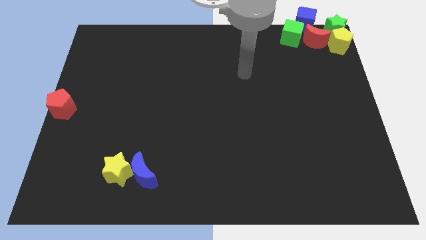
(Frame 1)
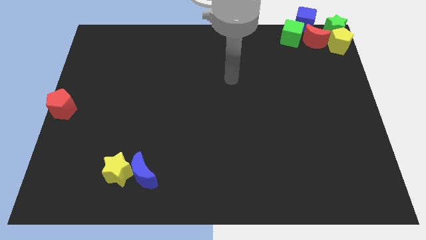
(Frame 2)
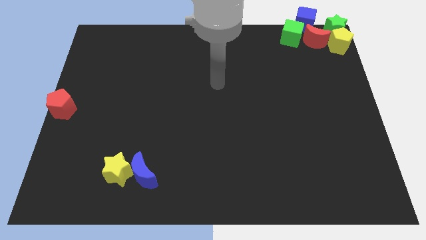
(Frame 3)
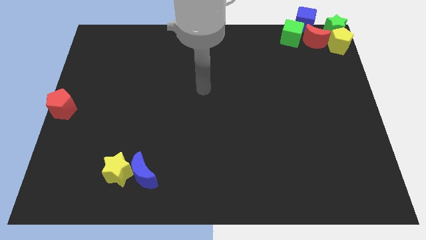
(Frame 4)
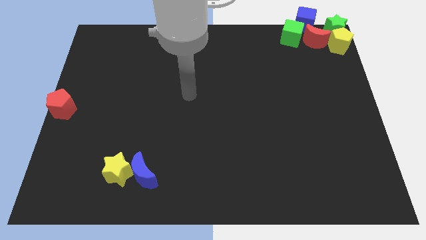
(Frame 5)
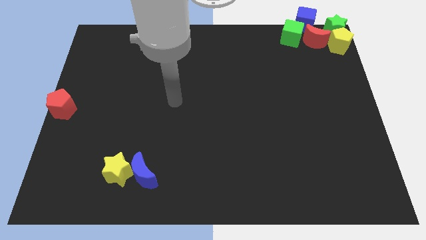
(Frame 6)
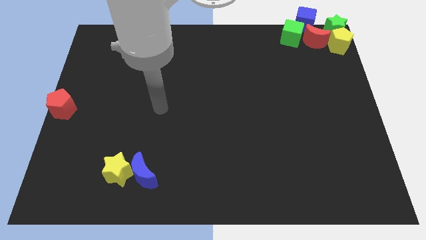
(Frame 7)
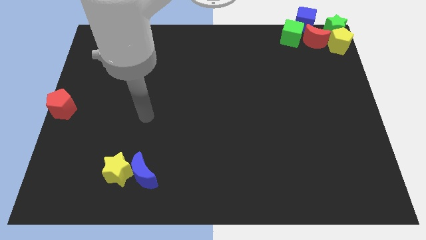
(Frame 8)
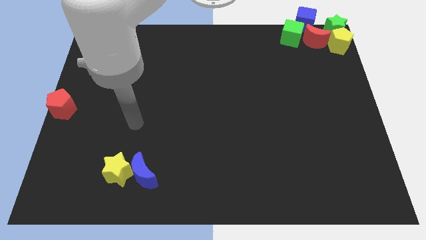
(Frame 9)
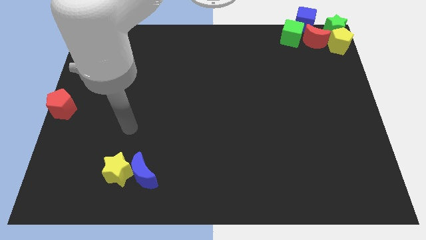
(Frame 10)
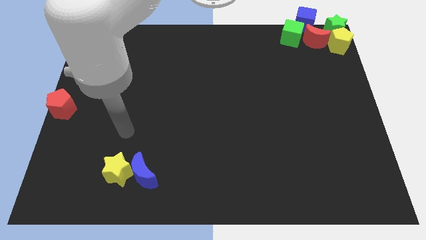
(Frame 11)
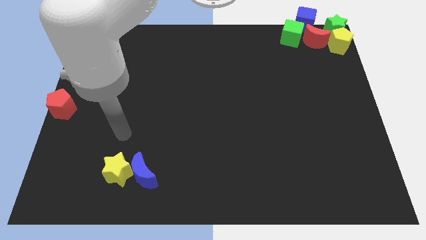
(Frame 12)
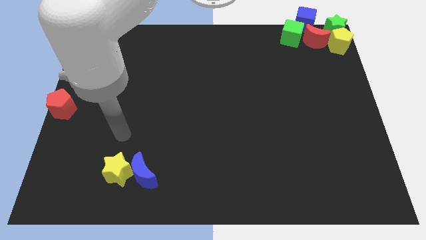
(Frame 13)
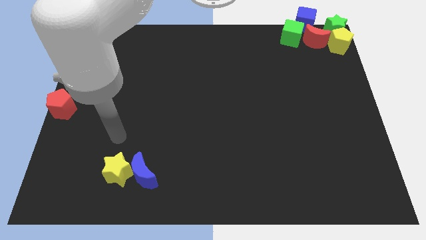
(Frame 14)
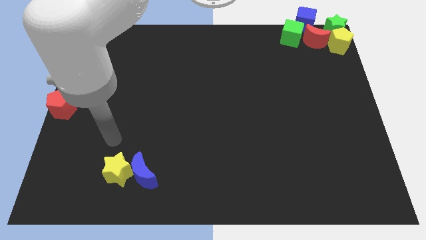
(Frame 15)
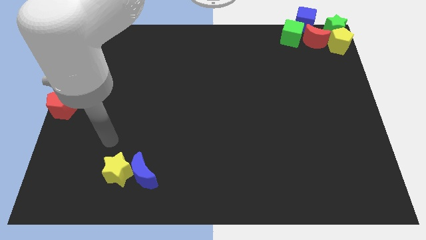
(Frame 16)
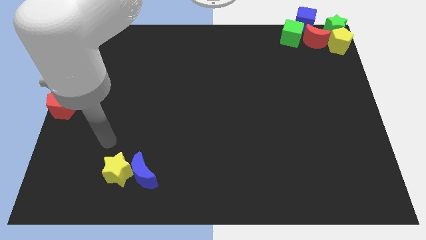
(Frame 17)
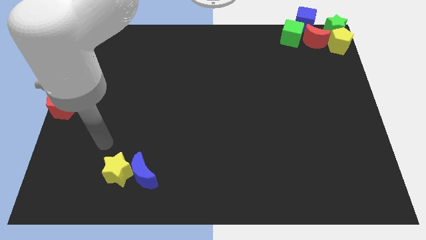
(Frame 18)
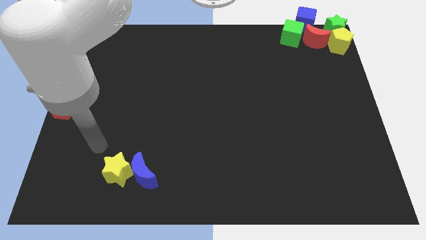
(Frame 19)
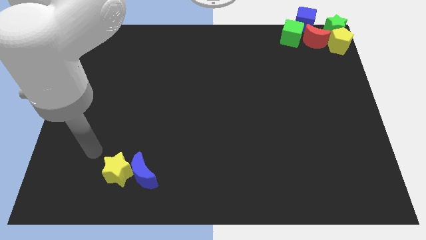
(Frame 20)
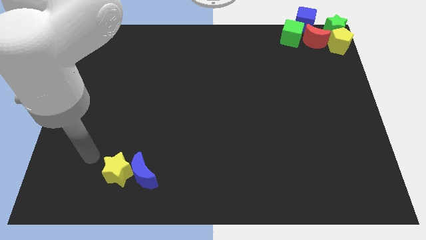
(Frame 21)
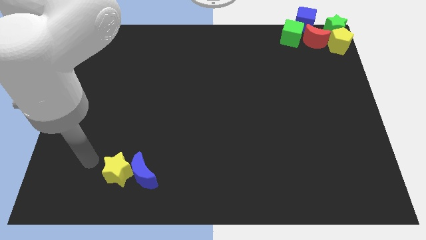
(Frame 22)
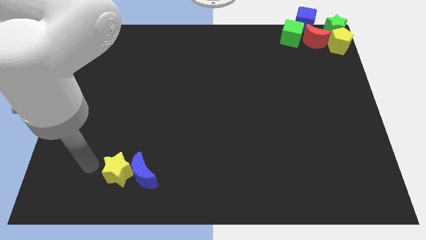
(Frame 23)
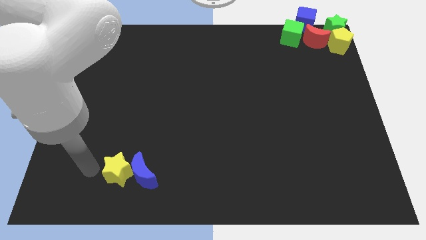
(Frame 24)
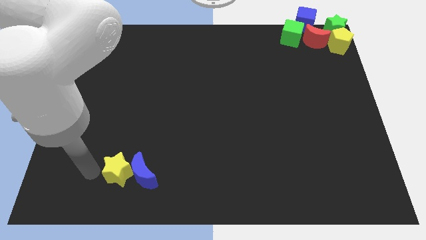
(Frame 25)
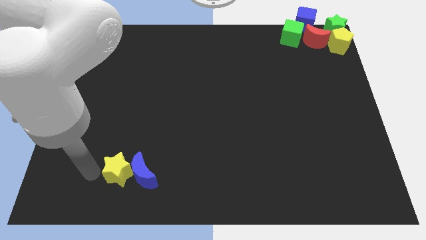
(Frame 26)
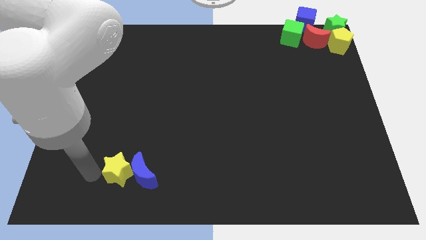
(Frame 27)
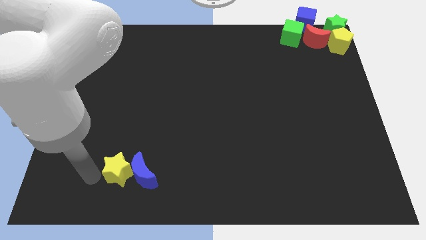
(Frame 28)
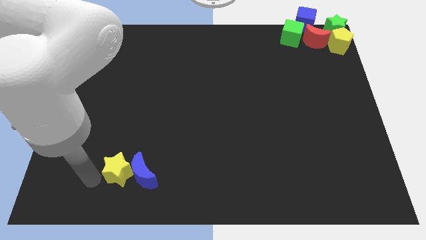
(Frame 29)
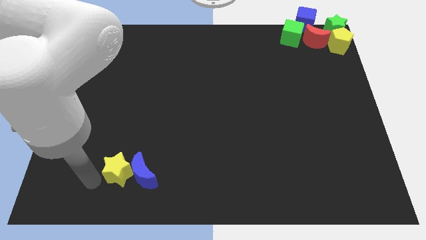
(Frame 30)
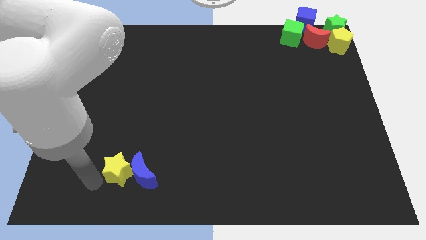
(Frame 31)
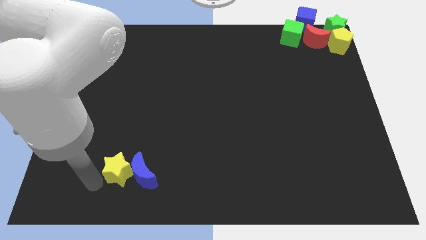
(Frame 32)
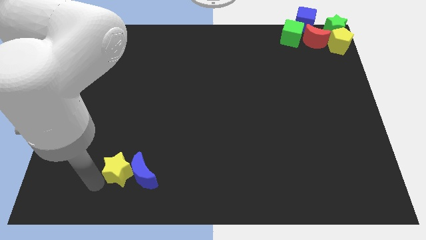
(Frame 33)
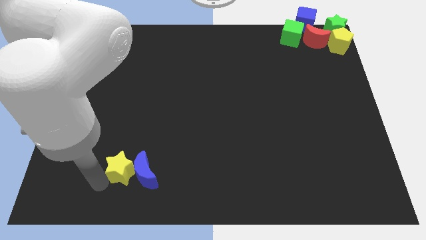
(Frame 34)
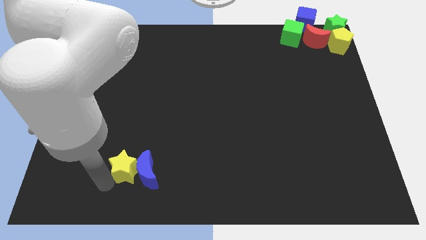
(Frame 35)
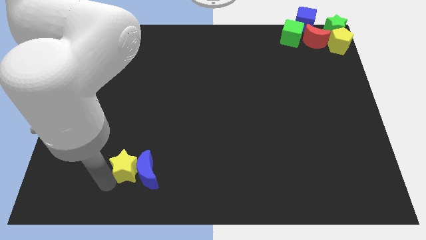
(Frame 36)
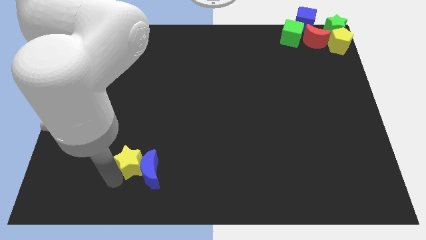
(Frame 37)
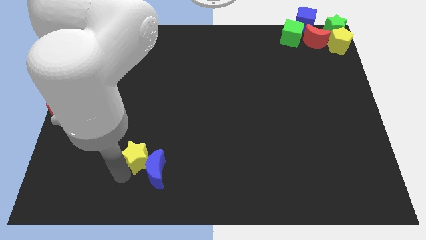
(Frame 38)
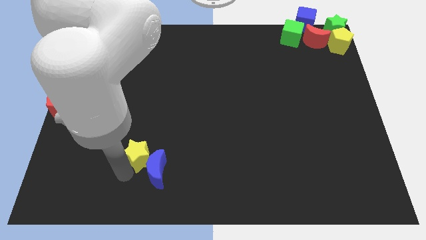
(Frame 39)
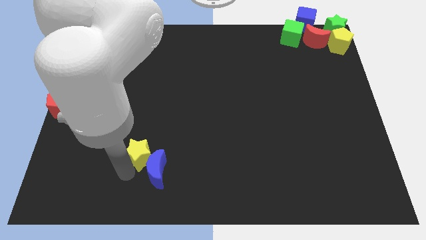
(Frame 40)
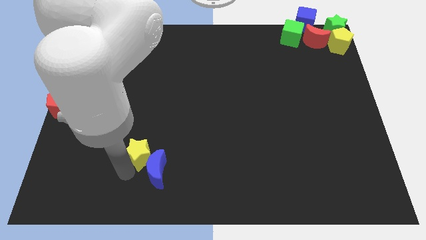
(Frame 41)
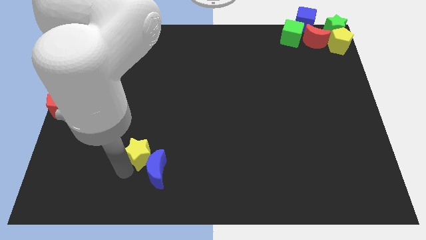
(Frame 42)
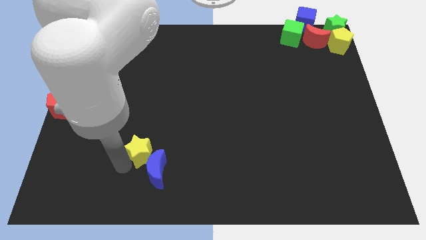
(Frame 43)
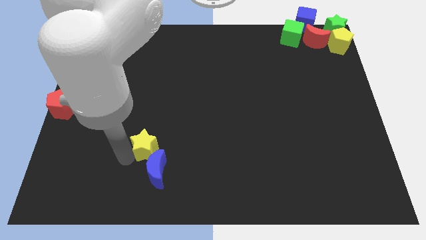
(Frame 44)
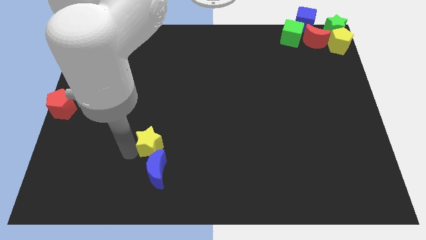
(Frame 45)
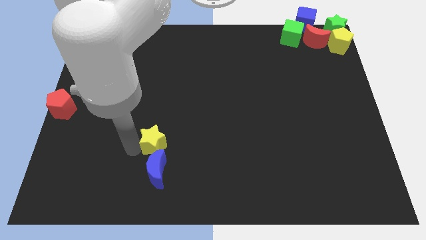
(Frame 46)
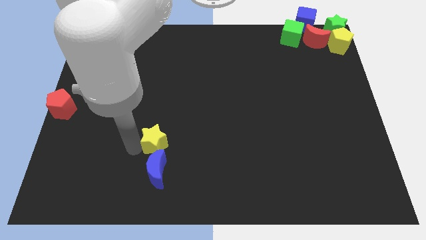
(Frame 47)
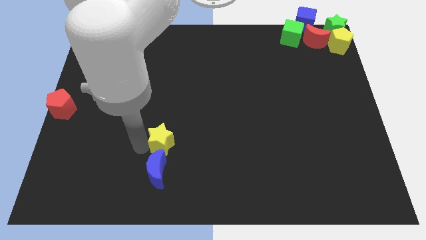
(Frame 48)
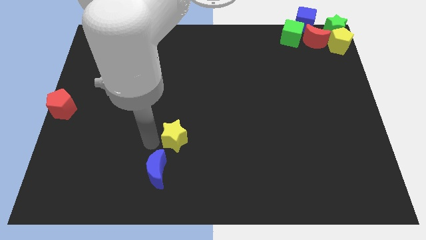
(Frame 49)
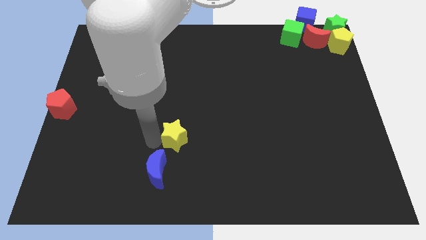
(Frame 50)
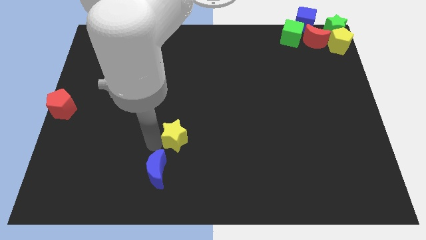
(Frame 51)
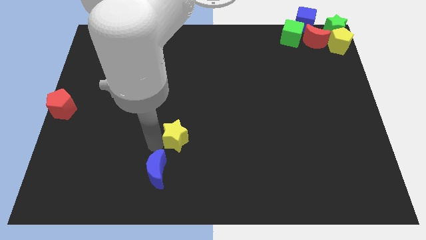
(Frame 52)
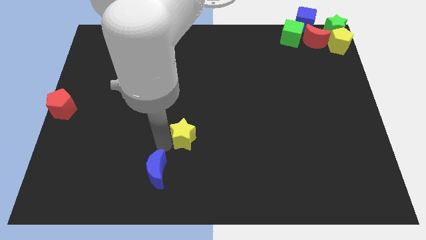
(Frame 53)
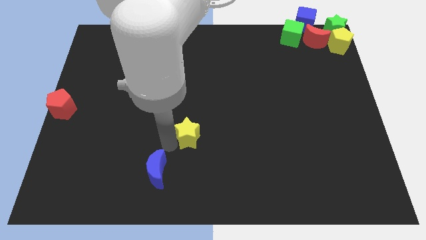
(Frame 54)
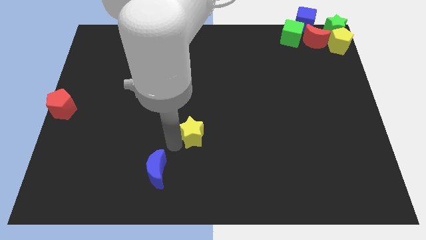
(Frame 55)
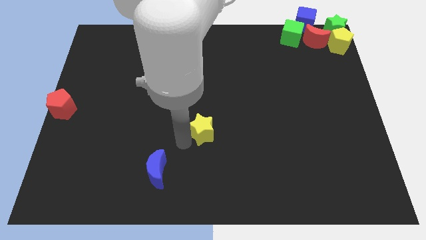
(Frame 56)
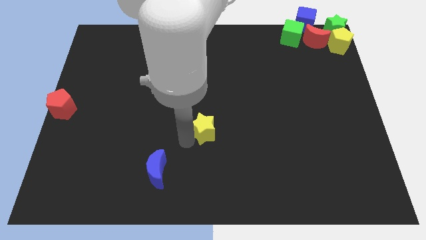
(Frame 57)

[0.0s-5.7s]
separate the yellow star from the blue crescent

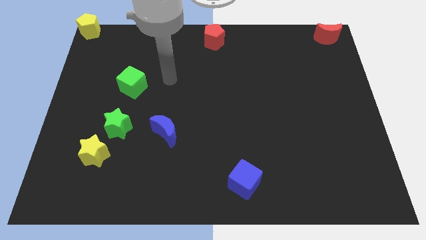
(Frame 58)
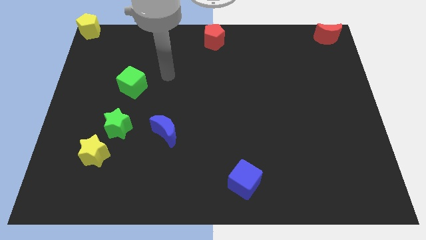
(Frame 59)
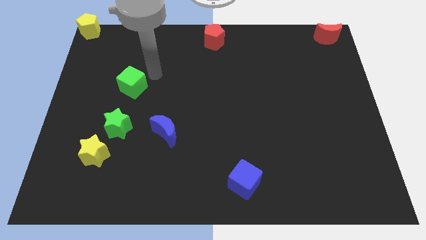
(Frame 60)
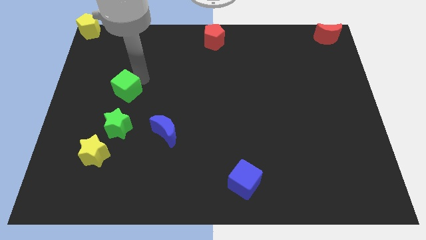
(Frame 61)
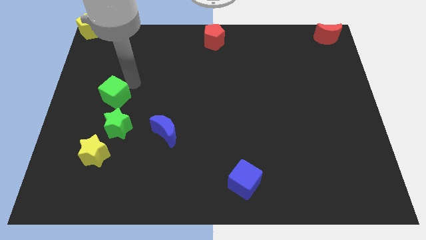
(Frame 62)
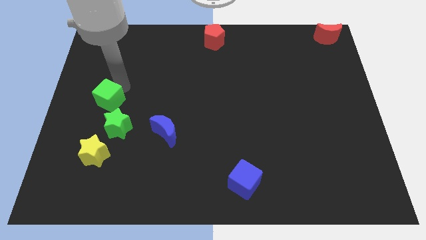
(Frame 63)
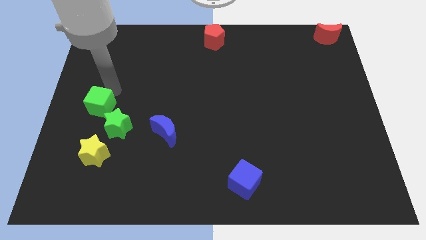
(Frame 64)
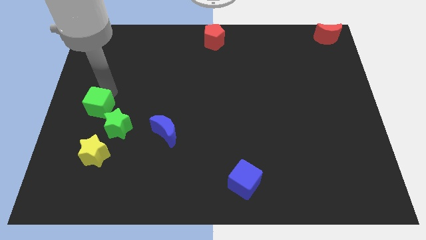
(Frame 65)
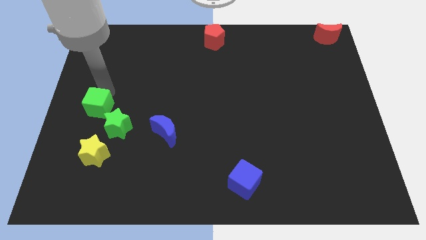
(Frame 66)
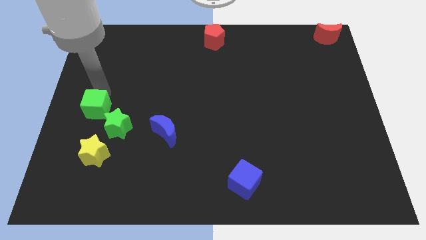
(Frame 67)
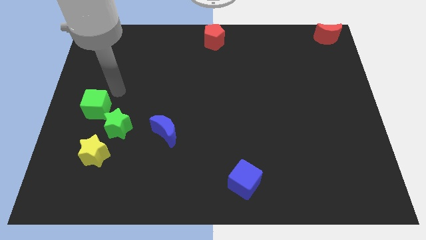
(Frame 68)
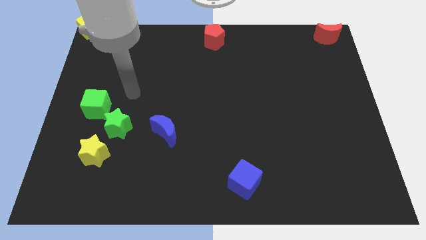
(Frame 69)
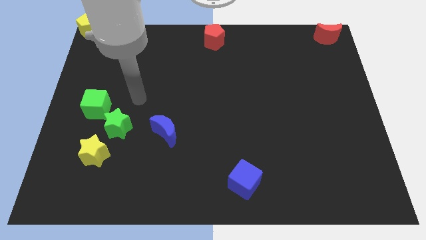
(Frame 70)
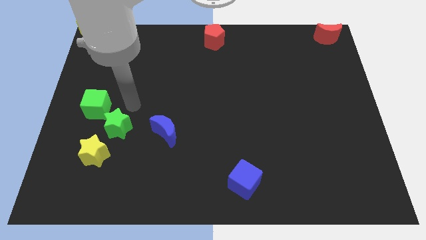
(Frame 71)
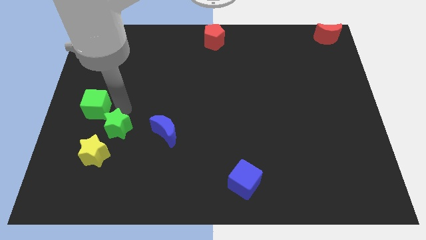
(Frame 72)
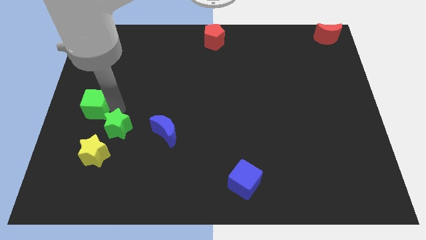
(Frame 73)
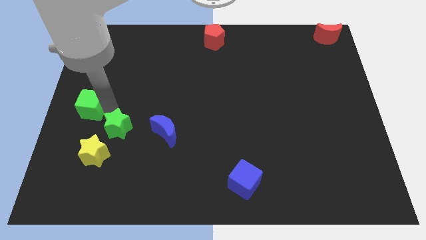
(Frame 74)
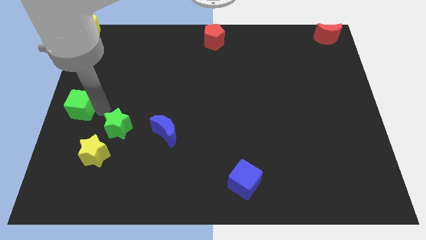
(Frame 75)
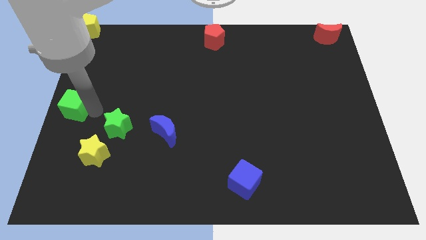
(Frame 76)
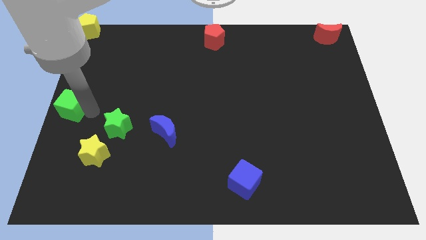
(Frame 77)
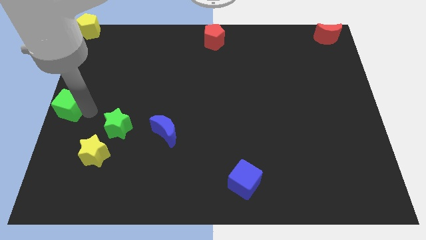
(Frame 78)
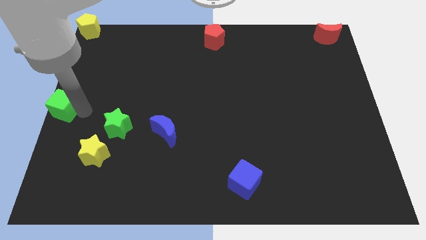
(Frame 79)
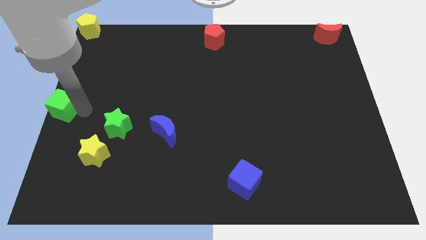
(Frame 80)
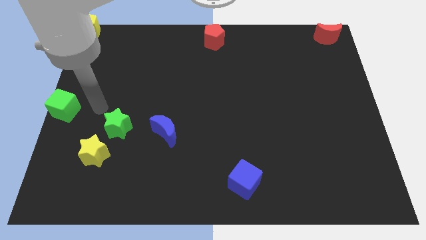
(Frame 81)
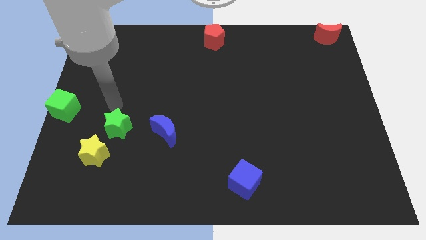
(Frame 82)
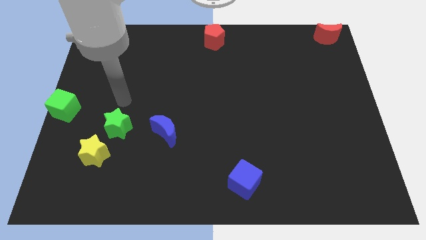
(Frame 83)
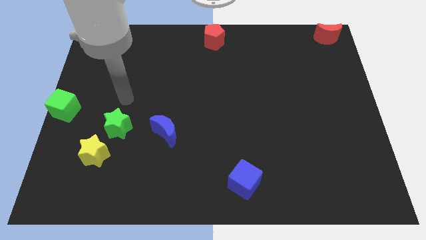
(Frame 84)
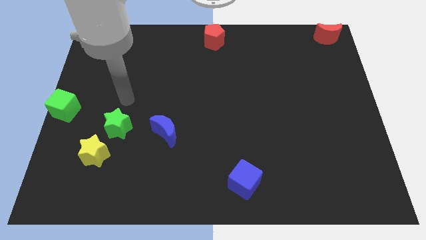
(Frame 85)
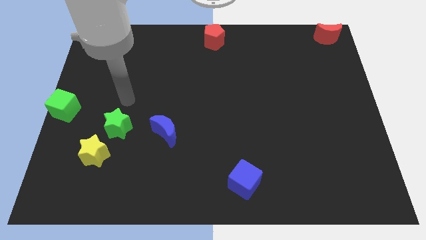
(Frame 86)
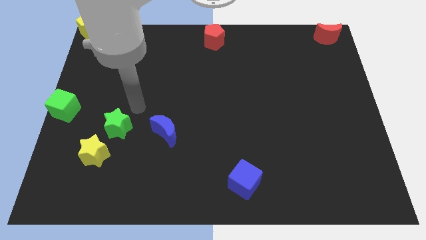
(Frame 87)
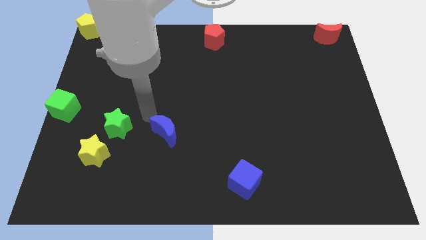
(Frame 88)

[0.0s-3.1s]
move the green cube to center left of the board

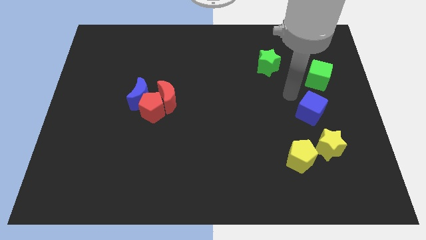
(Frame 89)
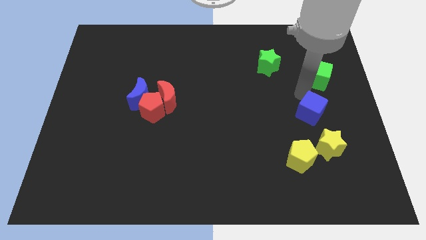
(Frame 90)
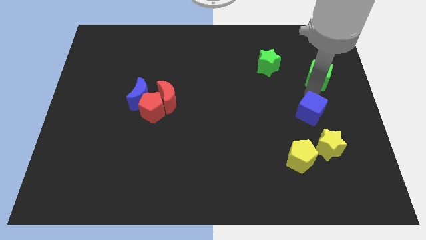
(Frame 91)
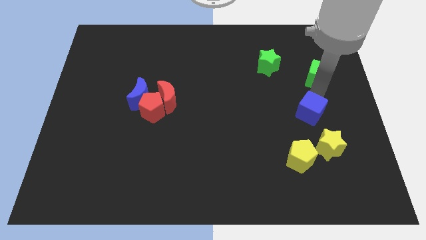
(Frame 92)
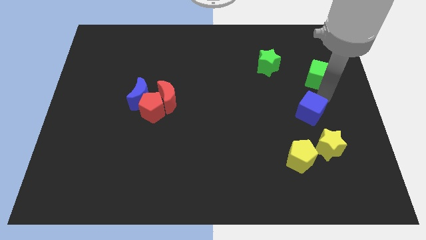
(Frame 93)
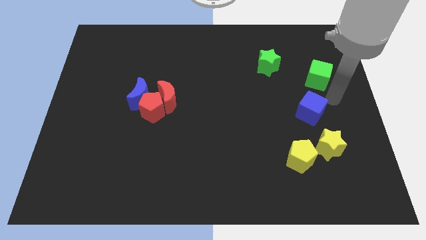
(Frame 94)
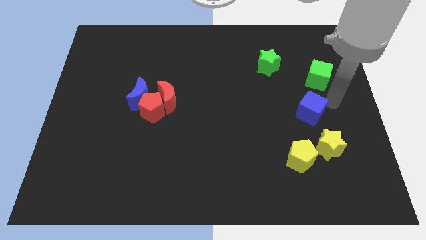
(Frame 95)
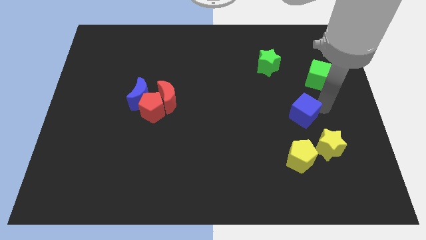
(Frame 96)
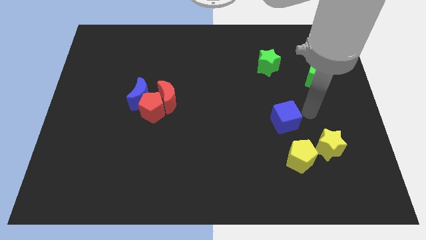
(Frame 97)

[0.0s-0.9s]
push blue cube above yellow pentagon
